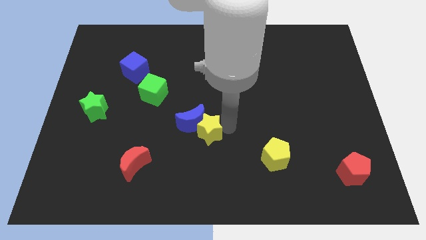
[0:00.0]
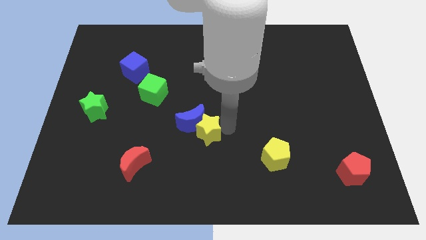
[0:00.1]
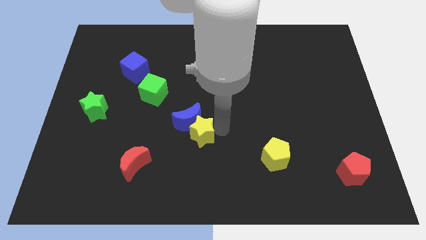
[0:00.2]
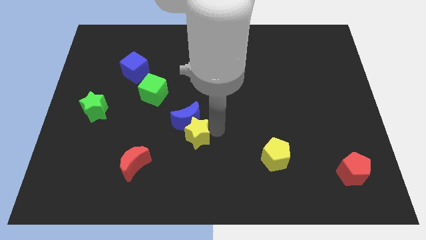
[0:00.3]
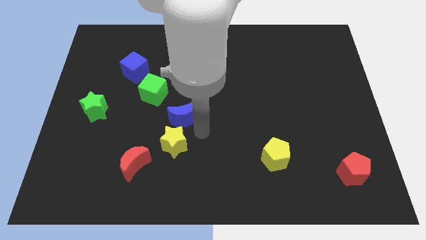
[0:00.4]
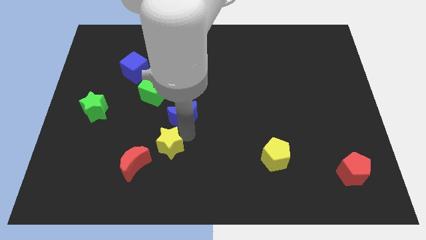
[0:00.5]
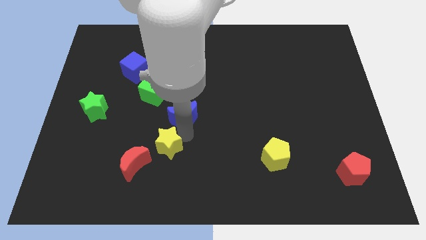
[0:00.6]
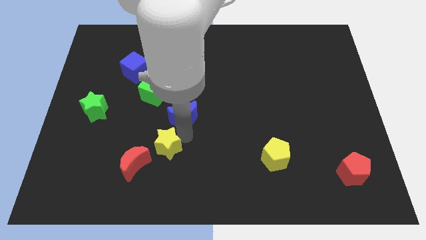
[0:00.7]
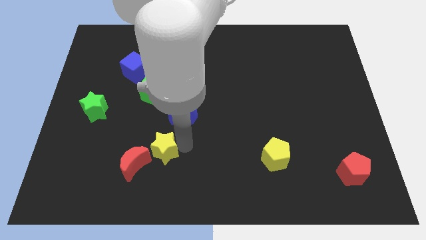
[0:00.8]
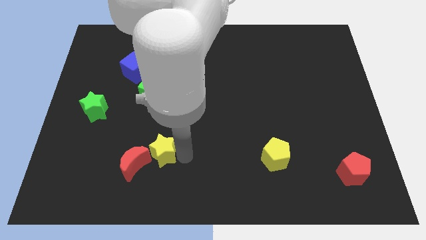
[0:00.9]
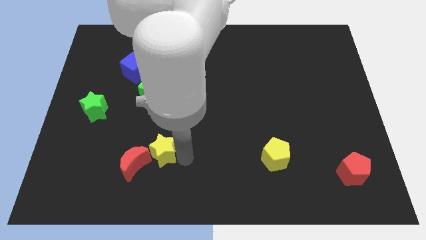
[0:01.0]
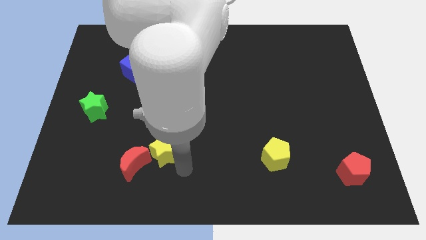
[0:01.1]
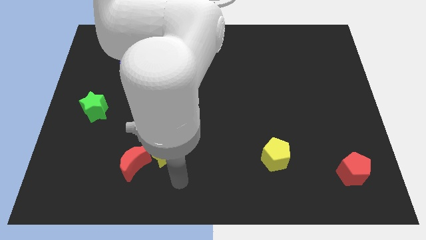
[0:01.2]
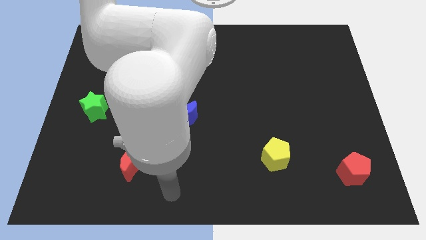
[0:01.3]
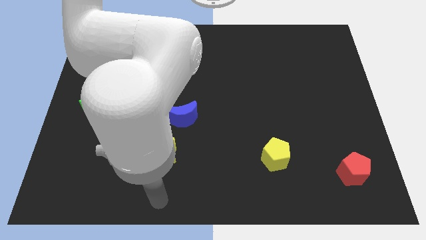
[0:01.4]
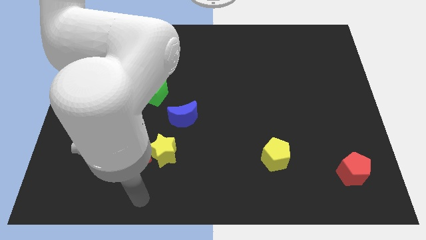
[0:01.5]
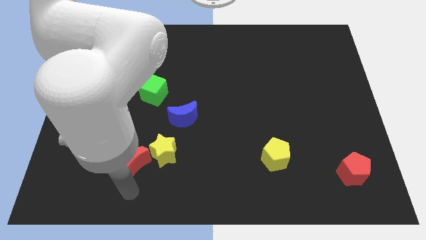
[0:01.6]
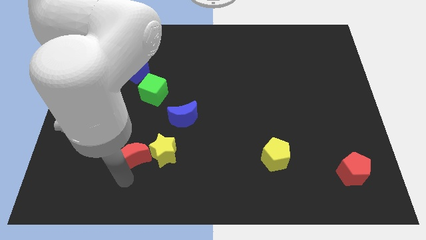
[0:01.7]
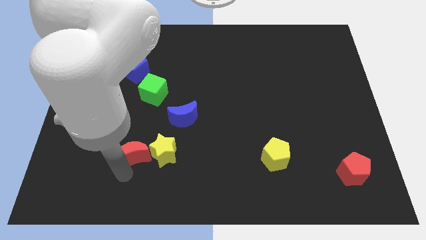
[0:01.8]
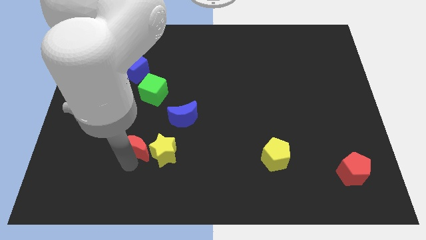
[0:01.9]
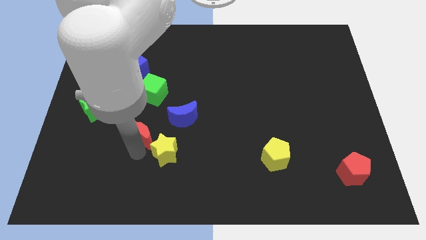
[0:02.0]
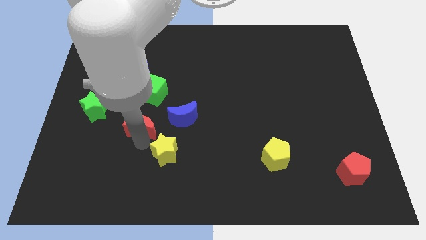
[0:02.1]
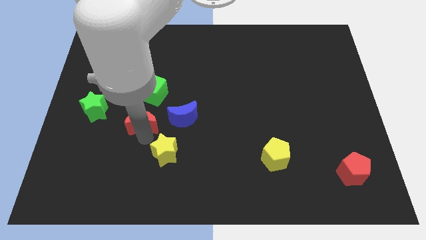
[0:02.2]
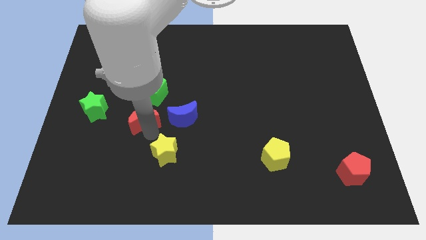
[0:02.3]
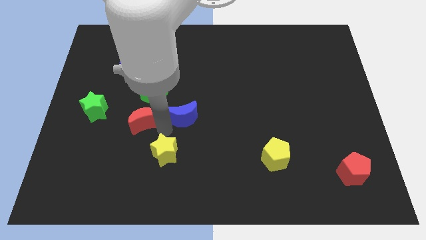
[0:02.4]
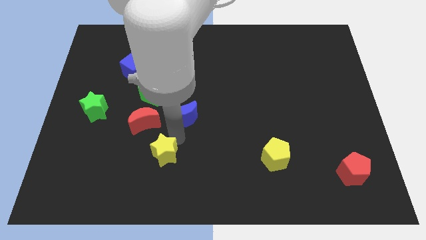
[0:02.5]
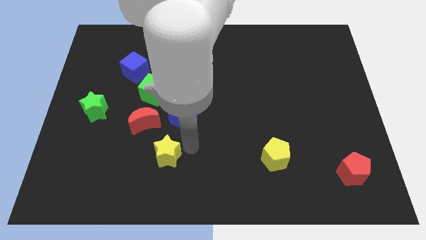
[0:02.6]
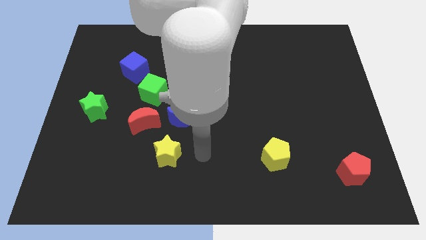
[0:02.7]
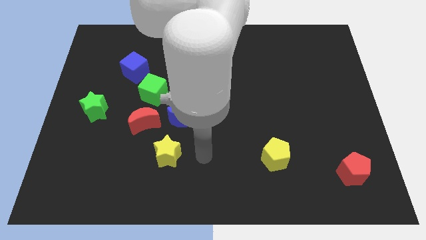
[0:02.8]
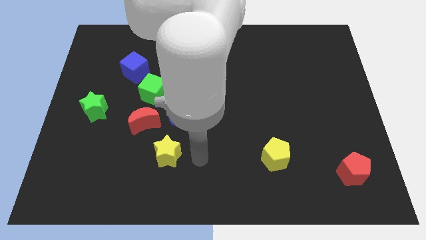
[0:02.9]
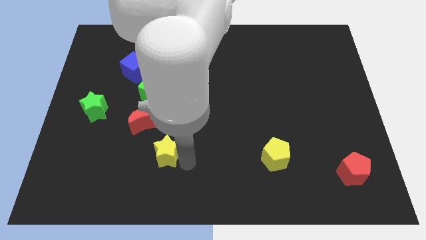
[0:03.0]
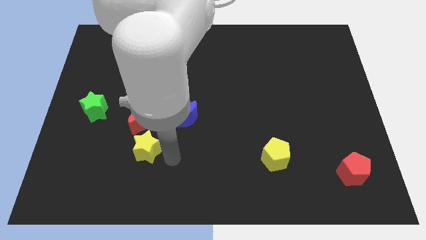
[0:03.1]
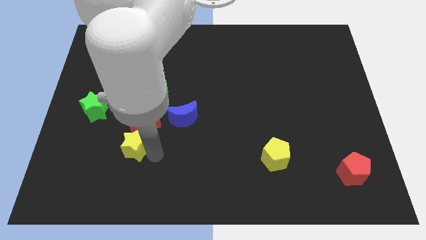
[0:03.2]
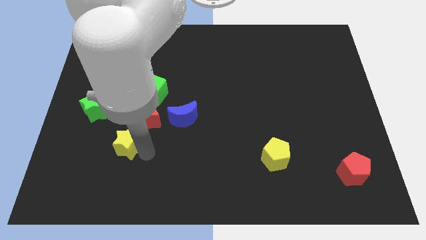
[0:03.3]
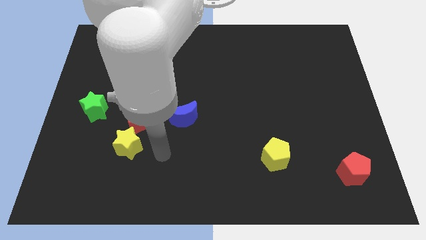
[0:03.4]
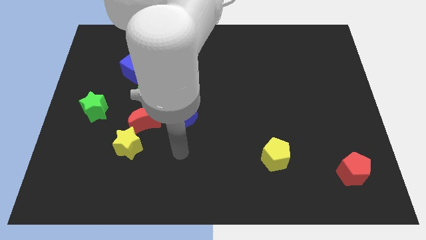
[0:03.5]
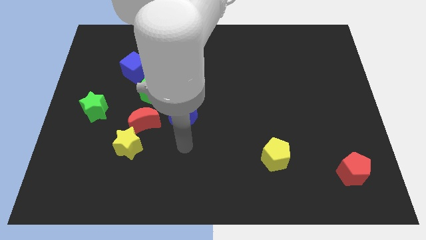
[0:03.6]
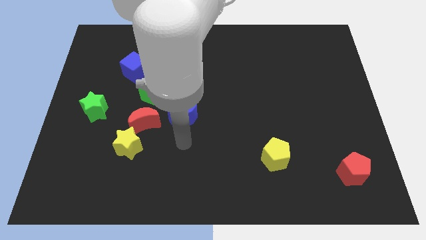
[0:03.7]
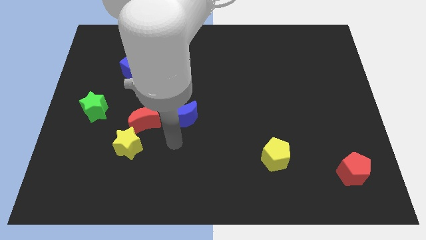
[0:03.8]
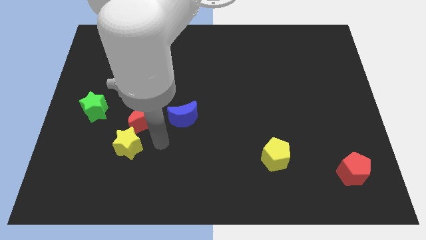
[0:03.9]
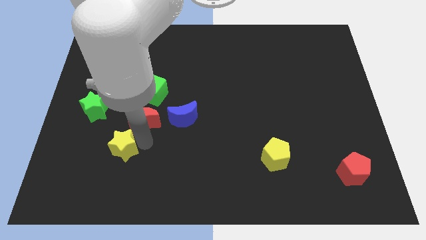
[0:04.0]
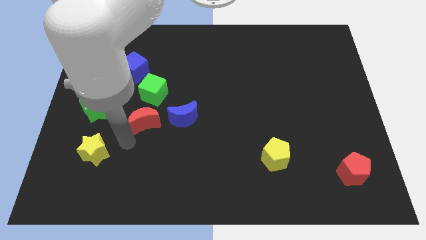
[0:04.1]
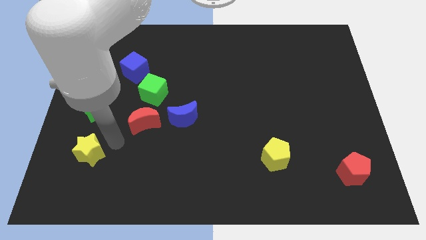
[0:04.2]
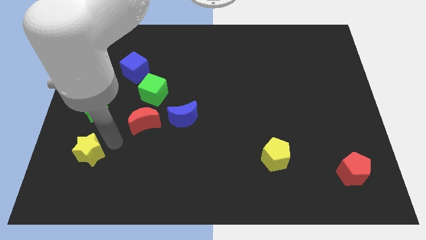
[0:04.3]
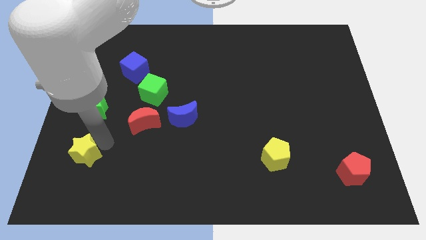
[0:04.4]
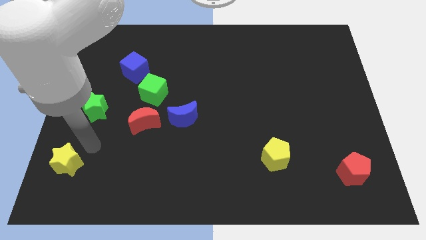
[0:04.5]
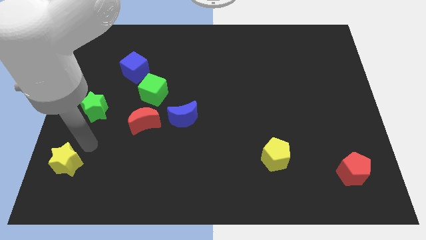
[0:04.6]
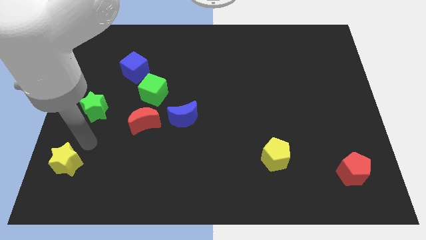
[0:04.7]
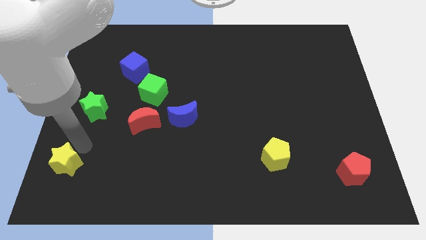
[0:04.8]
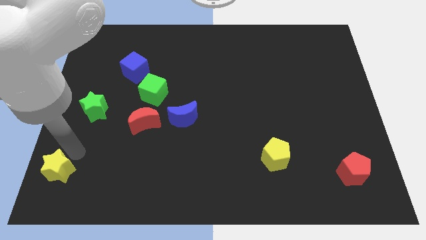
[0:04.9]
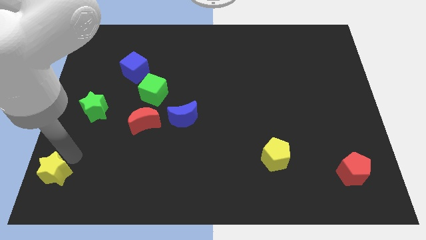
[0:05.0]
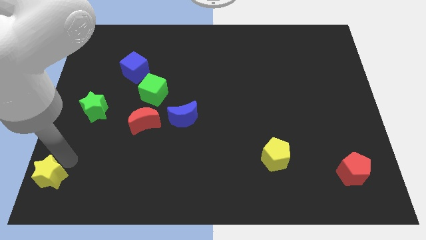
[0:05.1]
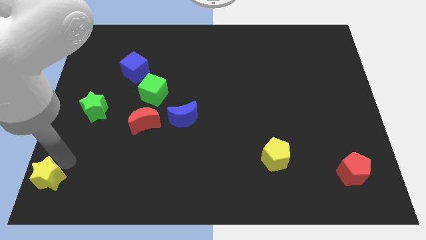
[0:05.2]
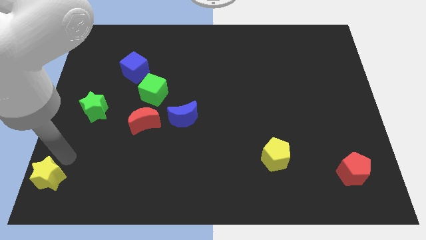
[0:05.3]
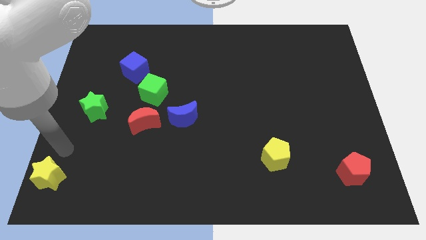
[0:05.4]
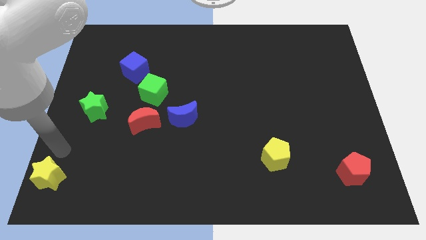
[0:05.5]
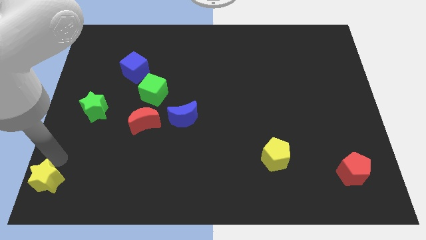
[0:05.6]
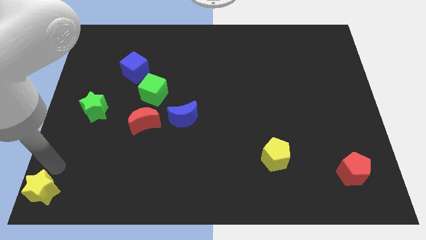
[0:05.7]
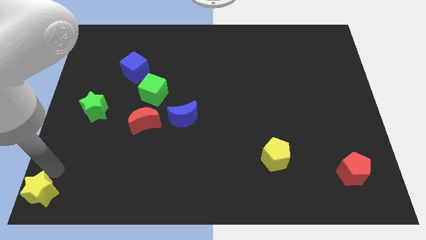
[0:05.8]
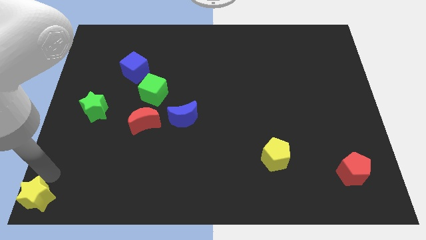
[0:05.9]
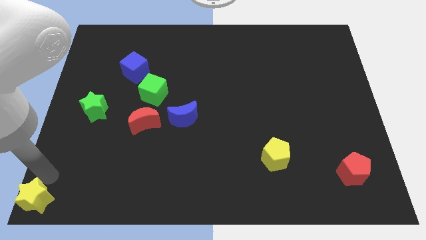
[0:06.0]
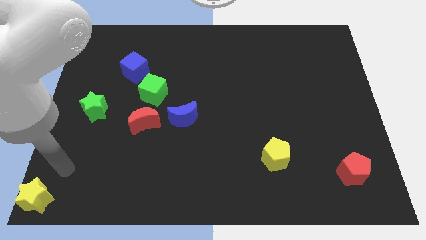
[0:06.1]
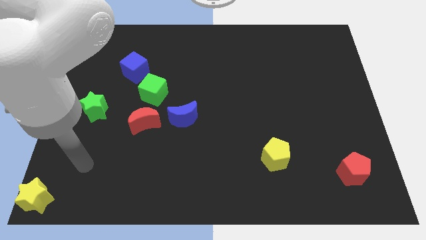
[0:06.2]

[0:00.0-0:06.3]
move the yellow star to the bottom left of the board

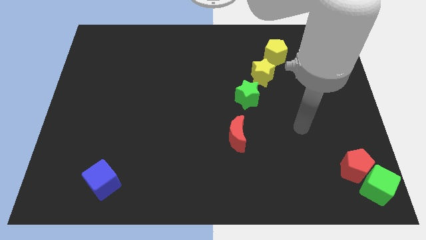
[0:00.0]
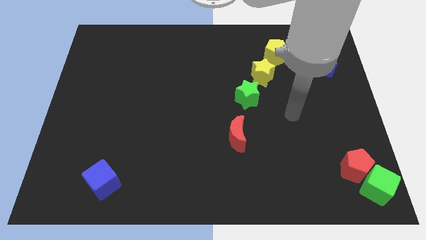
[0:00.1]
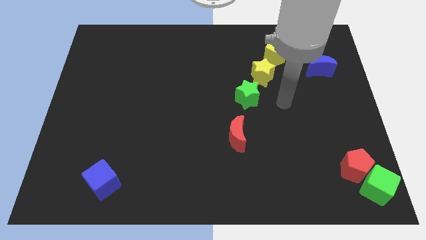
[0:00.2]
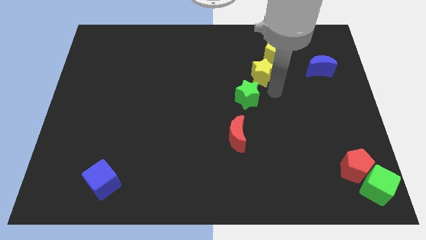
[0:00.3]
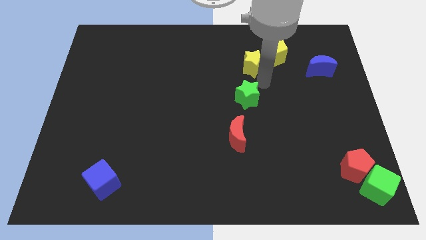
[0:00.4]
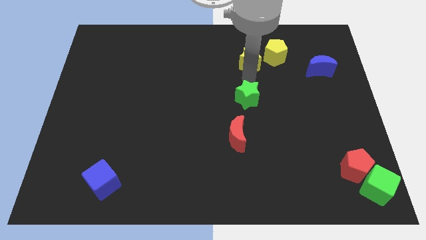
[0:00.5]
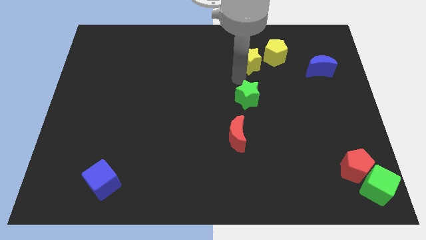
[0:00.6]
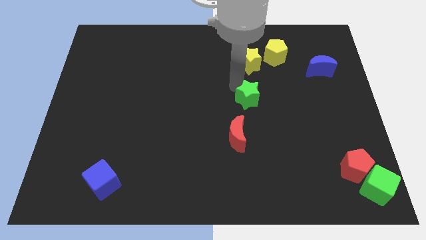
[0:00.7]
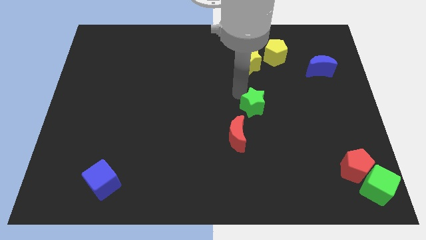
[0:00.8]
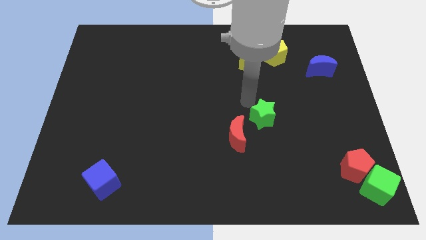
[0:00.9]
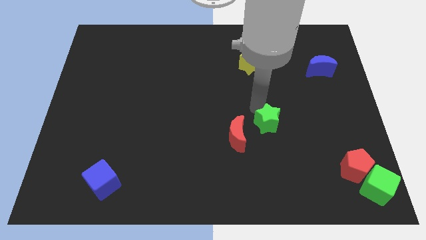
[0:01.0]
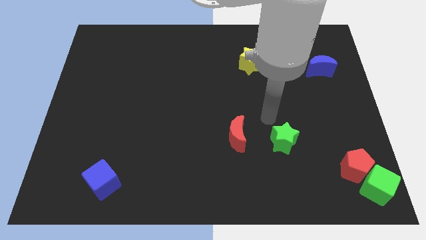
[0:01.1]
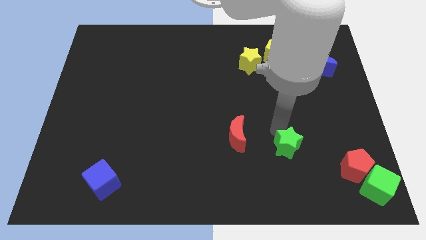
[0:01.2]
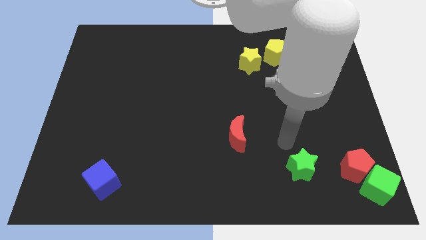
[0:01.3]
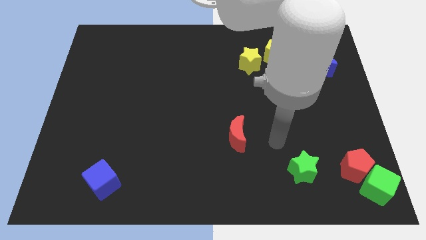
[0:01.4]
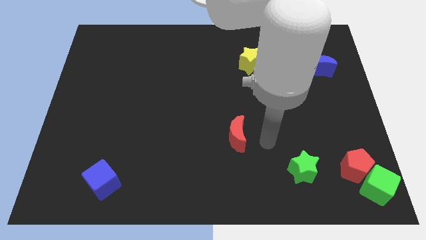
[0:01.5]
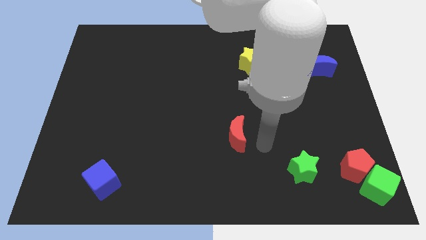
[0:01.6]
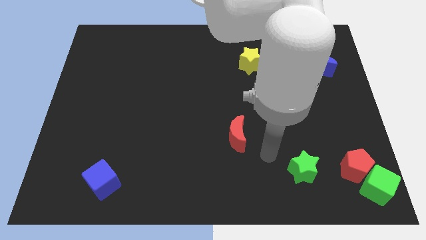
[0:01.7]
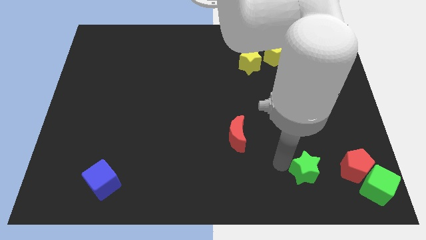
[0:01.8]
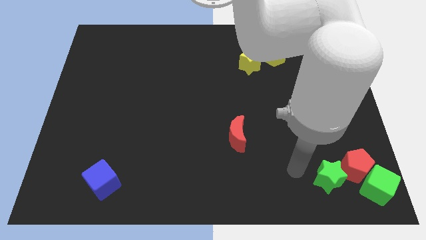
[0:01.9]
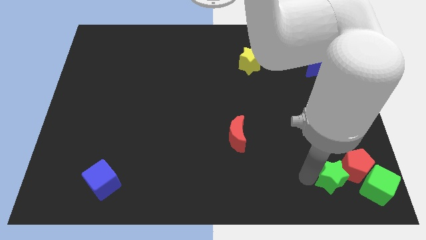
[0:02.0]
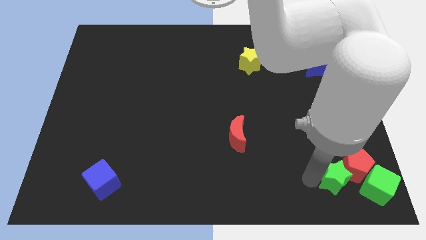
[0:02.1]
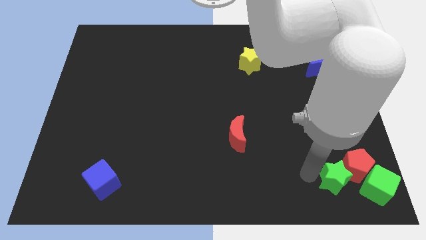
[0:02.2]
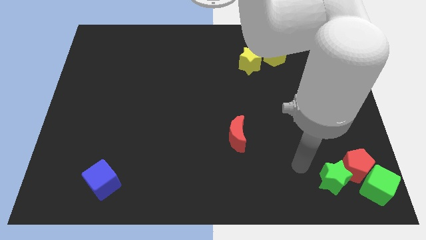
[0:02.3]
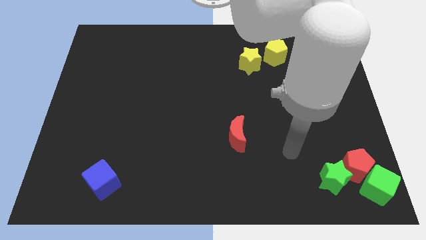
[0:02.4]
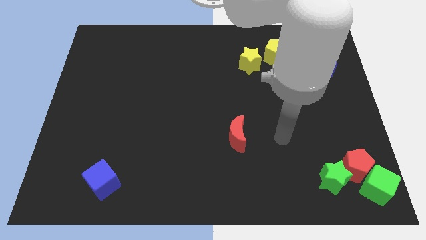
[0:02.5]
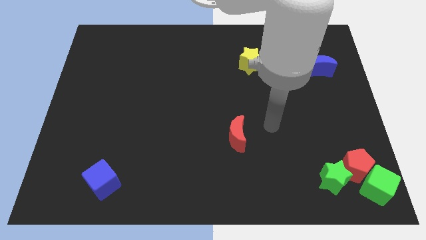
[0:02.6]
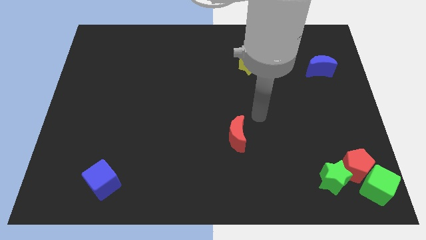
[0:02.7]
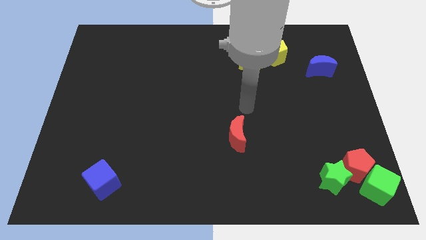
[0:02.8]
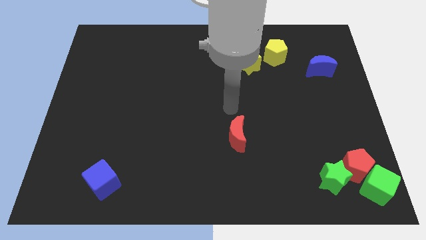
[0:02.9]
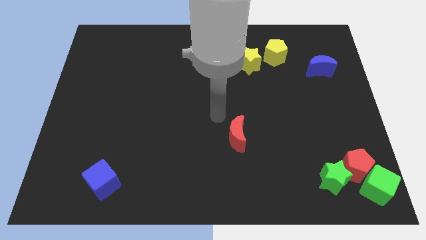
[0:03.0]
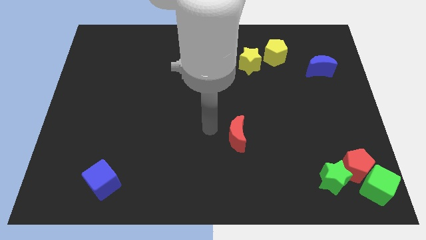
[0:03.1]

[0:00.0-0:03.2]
move the green star to the bottom left of the red pentagon
